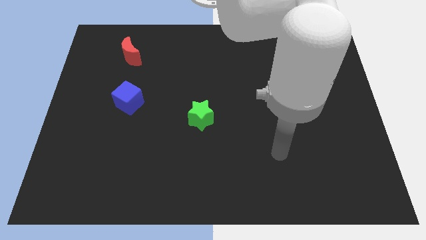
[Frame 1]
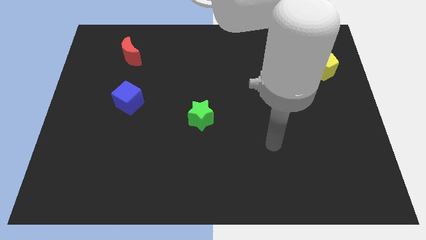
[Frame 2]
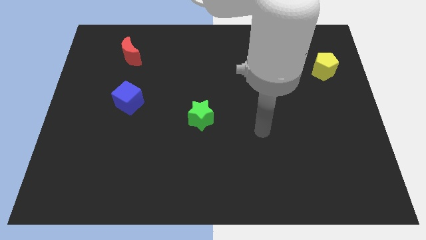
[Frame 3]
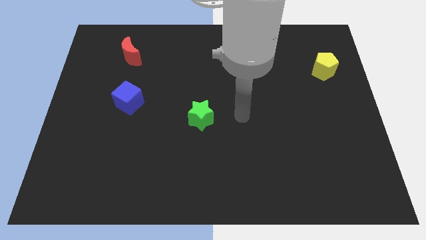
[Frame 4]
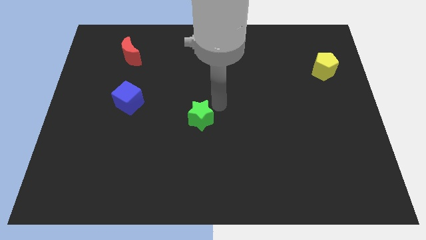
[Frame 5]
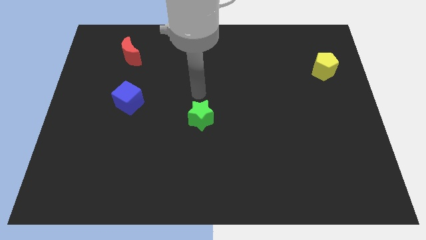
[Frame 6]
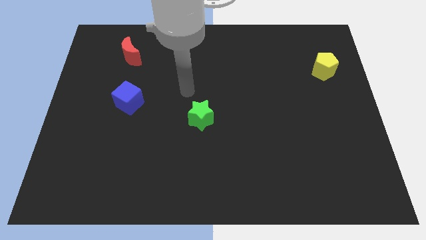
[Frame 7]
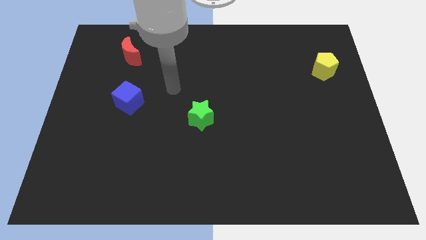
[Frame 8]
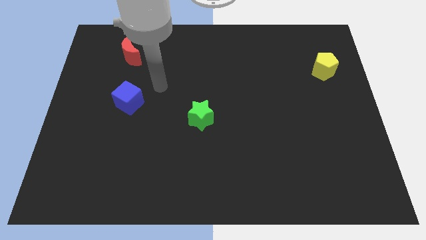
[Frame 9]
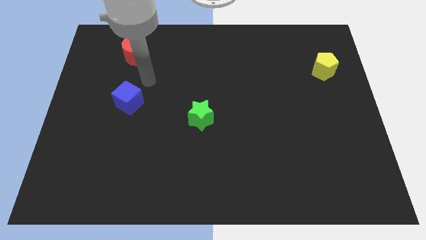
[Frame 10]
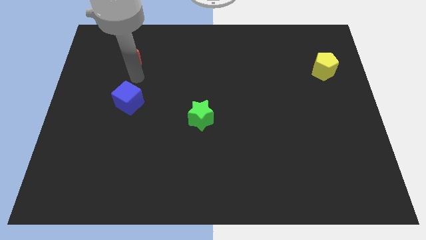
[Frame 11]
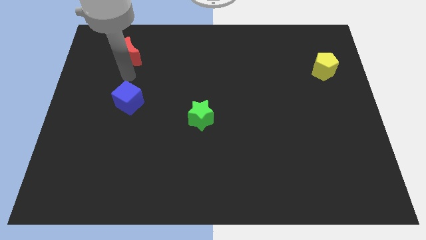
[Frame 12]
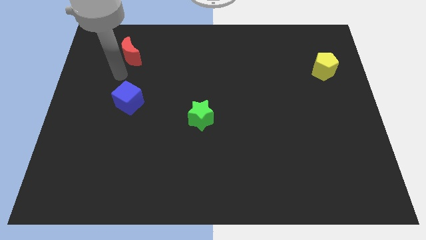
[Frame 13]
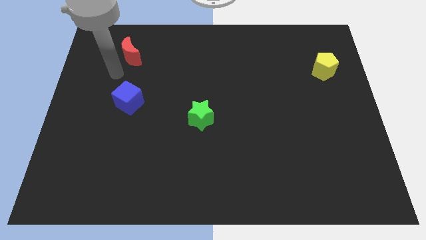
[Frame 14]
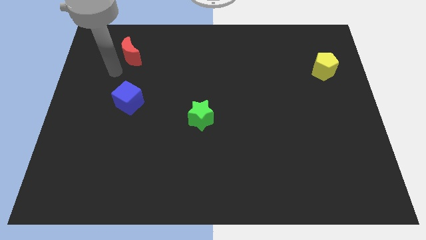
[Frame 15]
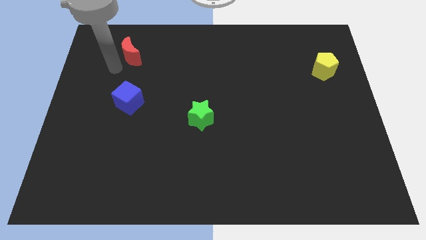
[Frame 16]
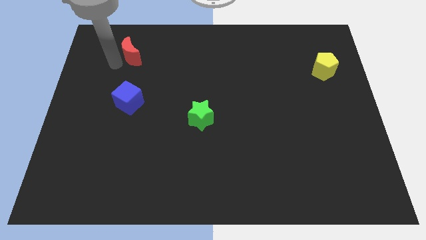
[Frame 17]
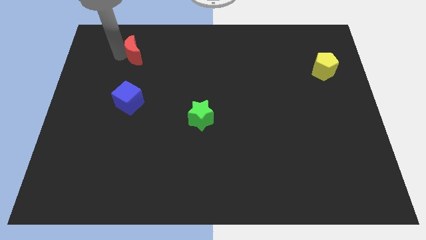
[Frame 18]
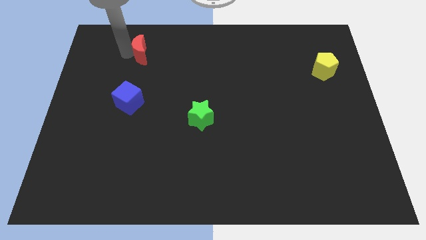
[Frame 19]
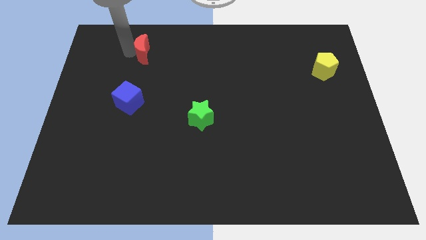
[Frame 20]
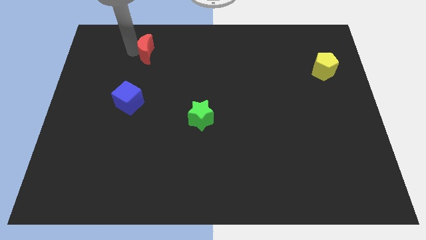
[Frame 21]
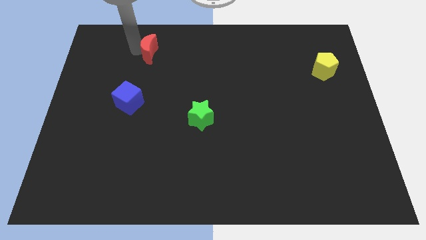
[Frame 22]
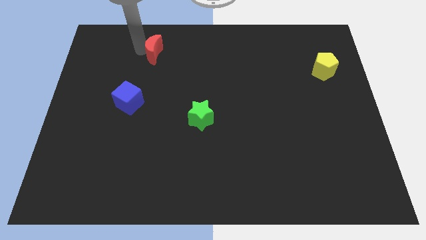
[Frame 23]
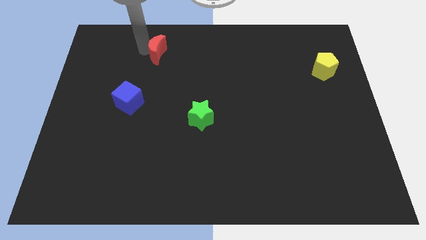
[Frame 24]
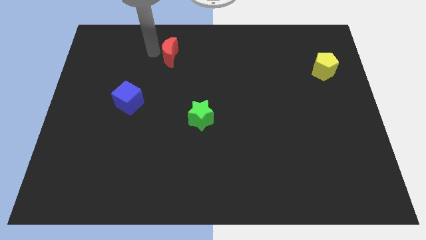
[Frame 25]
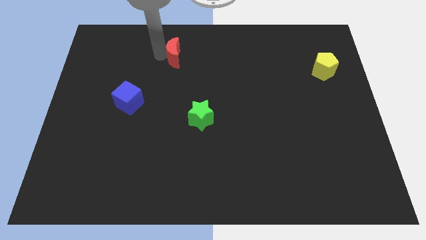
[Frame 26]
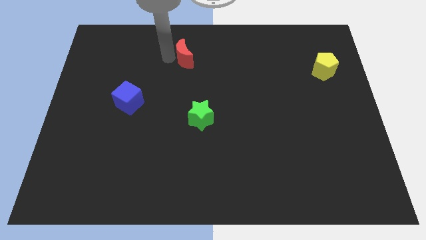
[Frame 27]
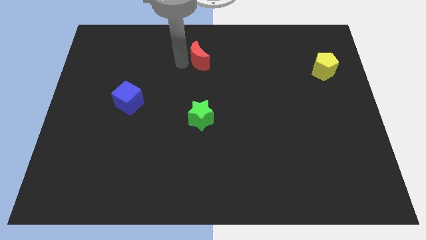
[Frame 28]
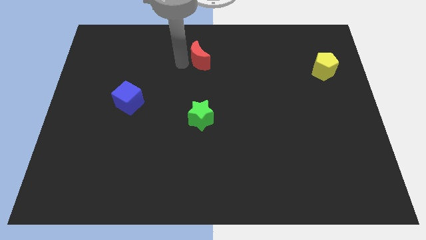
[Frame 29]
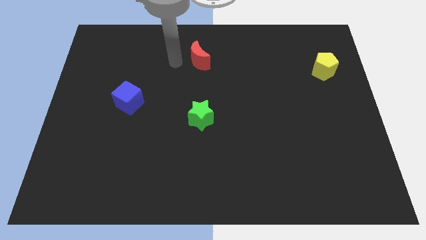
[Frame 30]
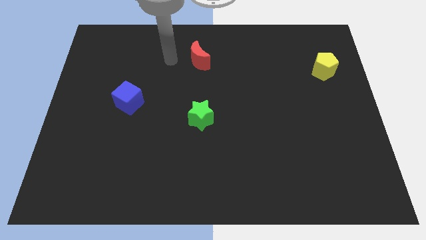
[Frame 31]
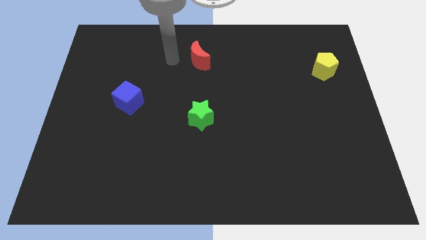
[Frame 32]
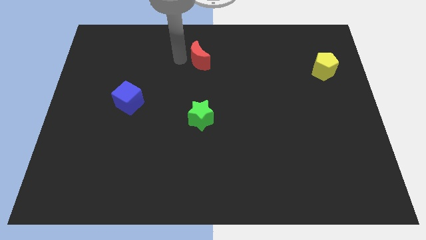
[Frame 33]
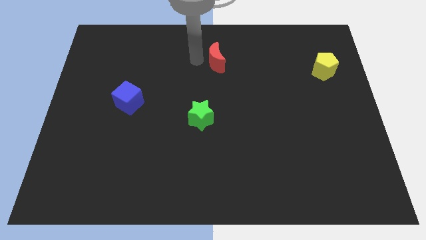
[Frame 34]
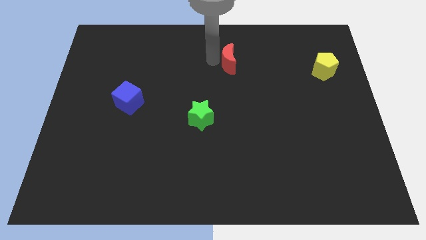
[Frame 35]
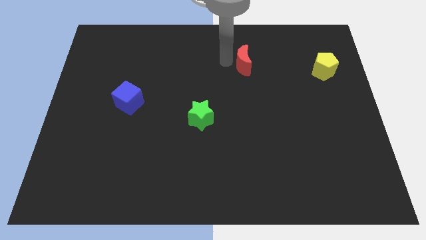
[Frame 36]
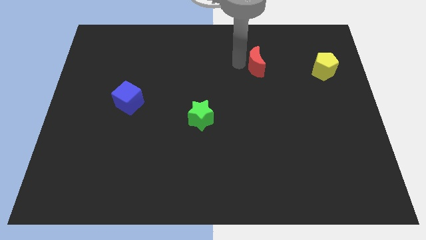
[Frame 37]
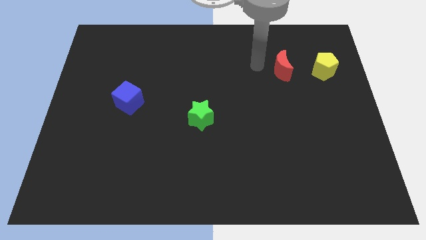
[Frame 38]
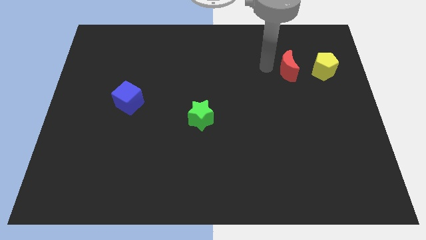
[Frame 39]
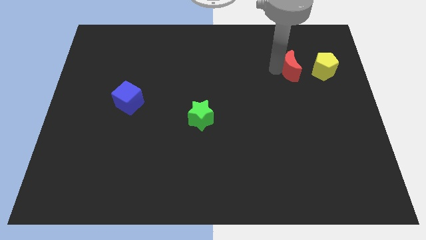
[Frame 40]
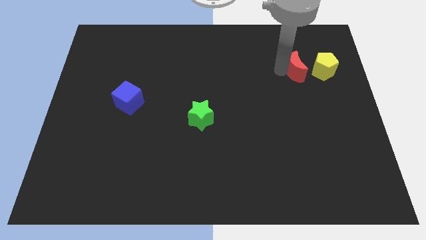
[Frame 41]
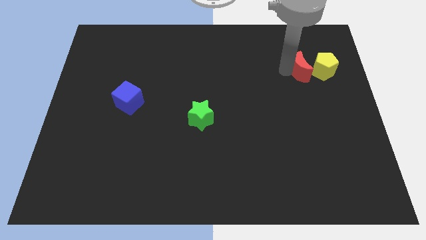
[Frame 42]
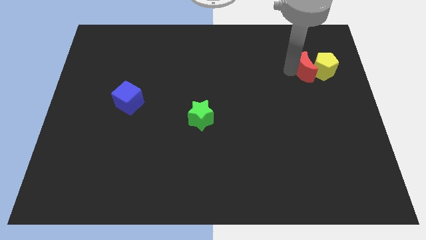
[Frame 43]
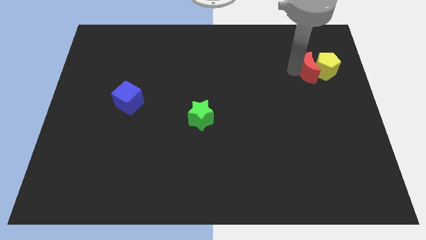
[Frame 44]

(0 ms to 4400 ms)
put the red moon to the pentagon

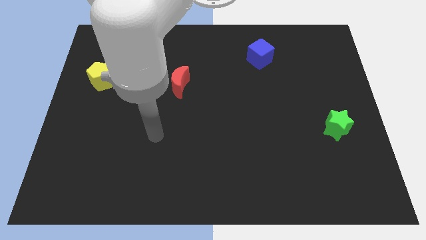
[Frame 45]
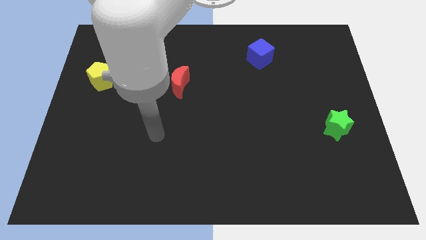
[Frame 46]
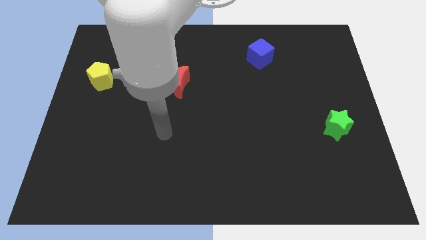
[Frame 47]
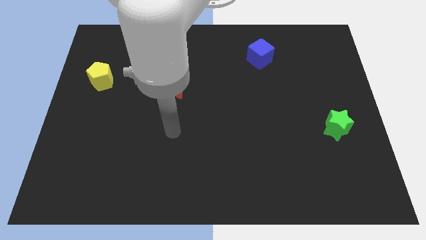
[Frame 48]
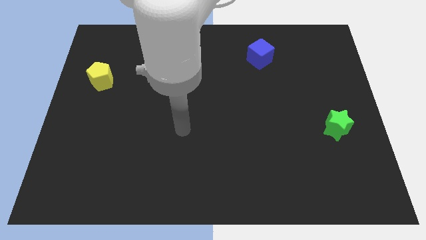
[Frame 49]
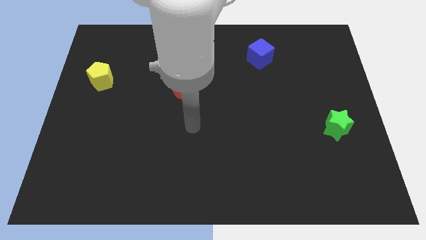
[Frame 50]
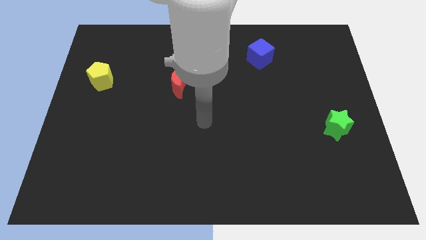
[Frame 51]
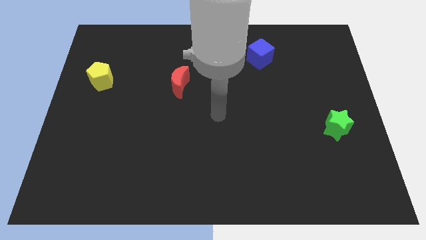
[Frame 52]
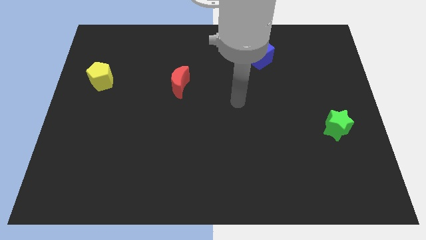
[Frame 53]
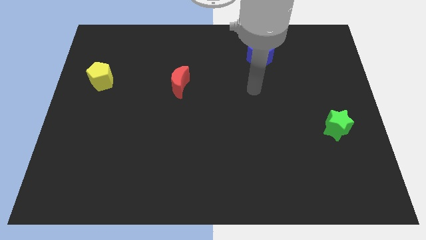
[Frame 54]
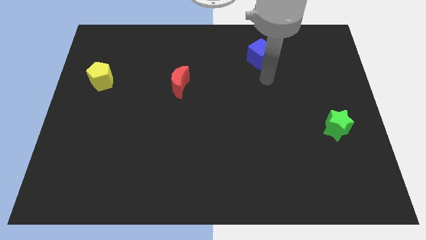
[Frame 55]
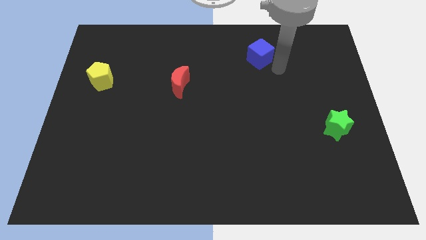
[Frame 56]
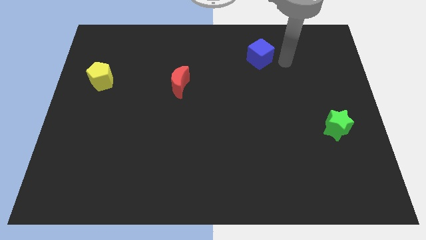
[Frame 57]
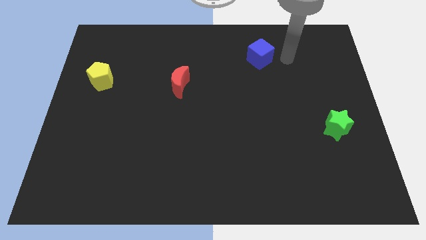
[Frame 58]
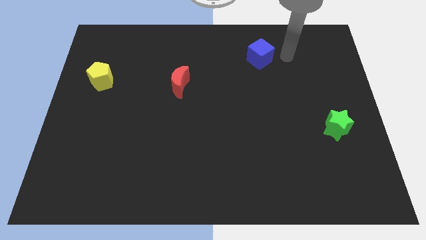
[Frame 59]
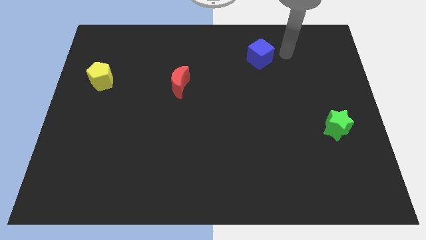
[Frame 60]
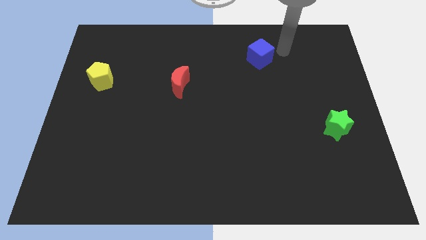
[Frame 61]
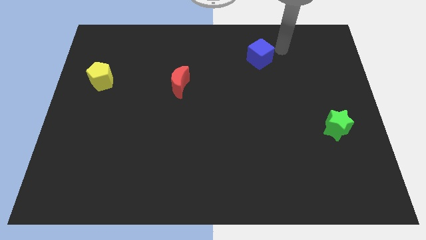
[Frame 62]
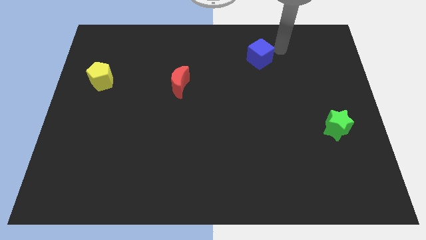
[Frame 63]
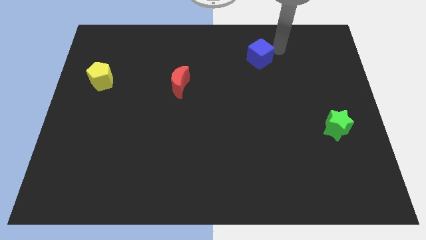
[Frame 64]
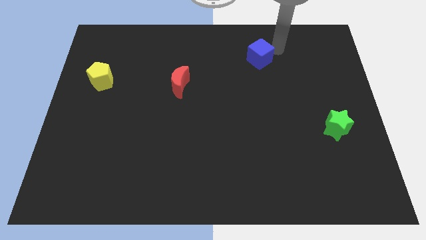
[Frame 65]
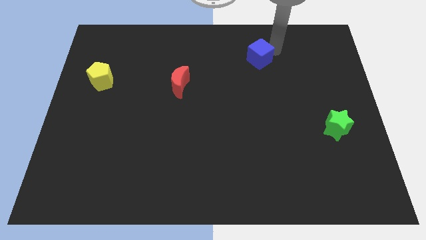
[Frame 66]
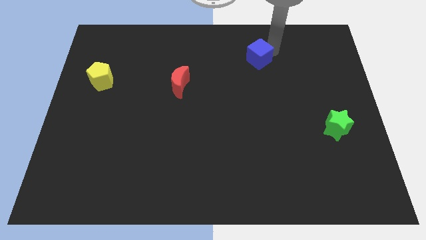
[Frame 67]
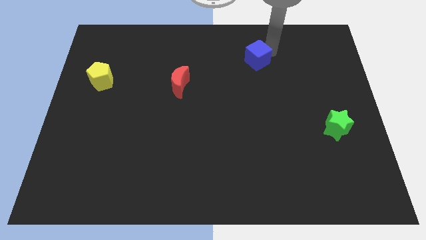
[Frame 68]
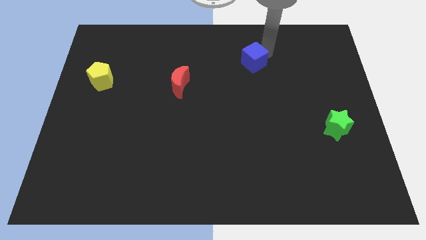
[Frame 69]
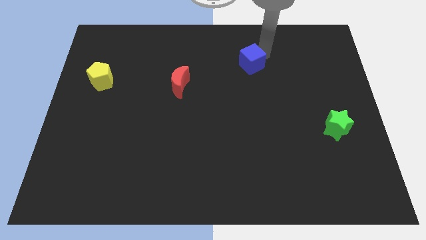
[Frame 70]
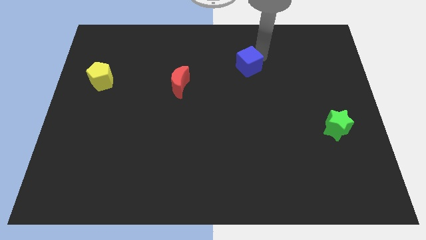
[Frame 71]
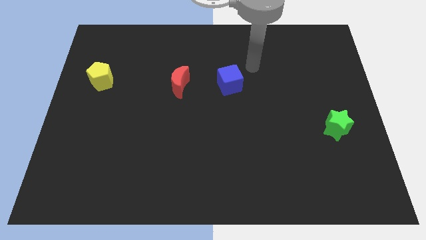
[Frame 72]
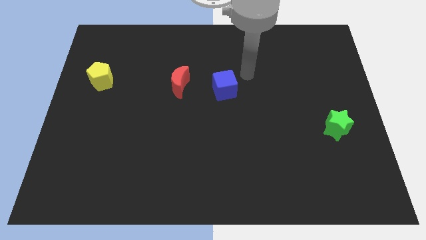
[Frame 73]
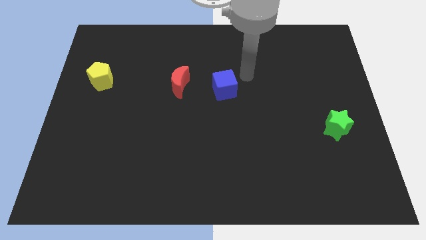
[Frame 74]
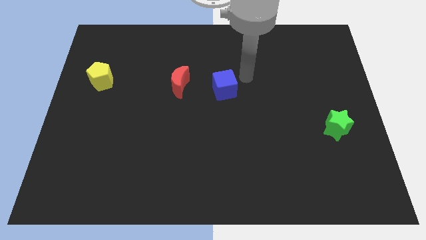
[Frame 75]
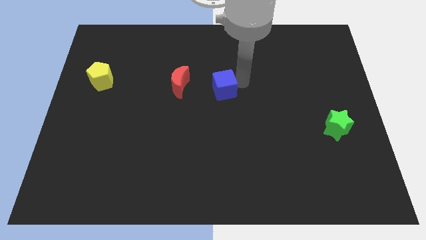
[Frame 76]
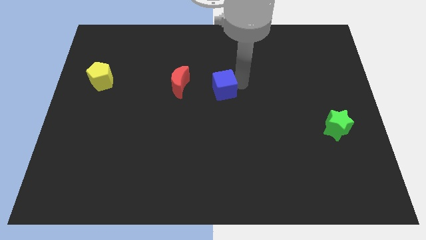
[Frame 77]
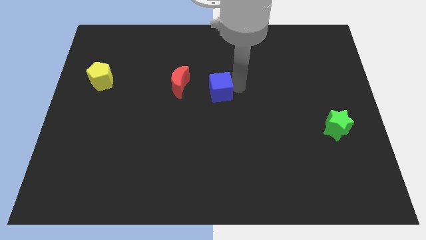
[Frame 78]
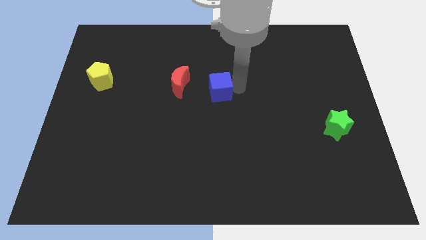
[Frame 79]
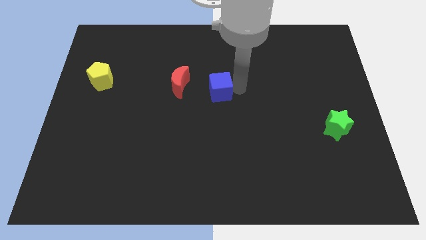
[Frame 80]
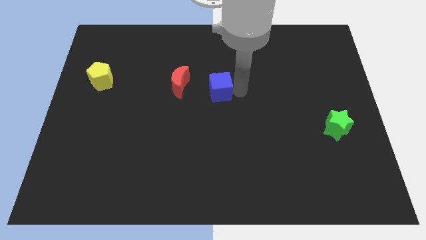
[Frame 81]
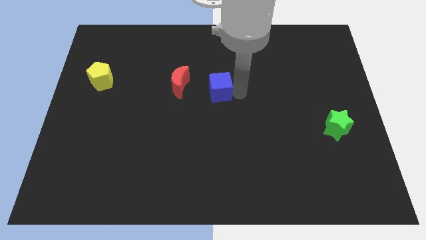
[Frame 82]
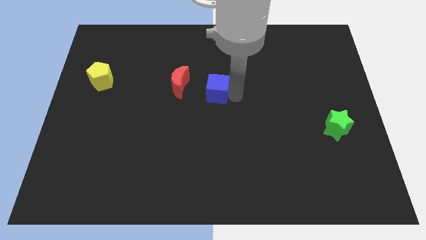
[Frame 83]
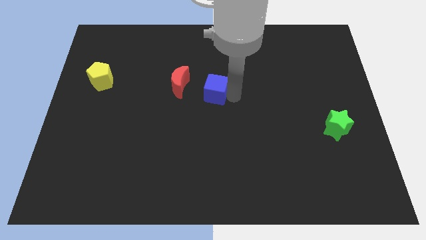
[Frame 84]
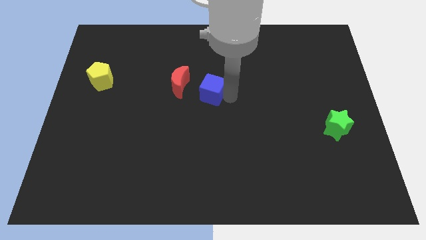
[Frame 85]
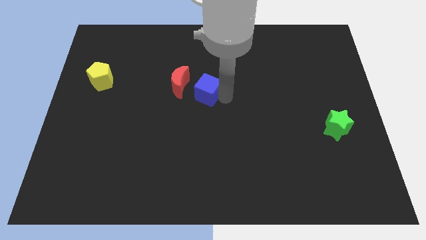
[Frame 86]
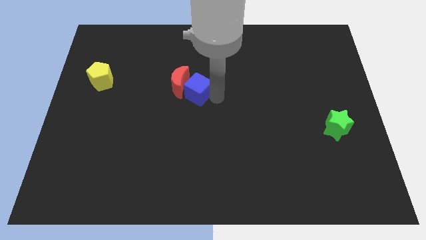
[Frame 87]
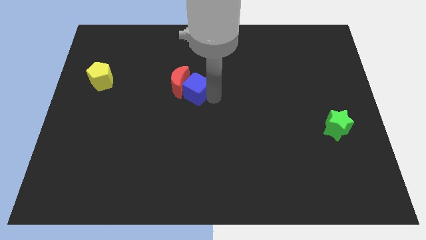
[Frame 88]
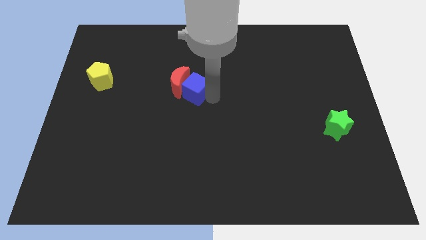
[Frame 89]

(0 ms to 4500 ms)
slide the cube to the red block
